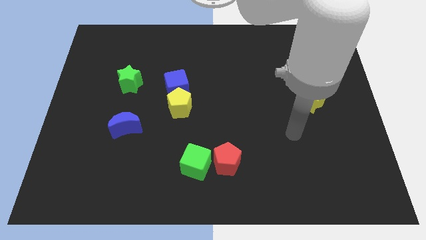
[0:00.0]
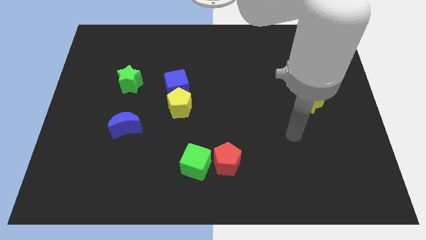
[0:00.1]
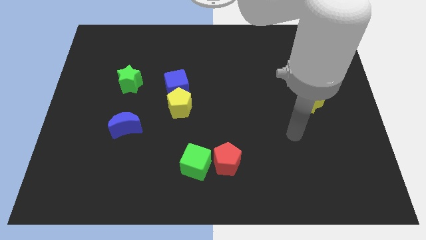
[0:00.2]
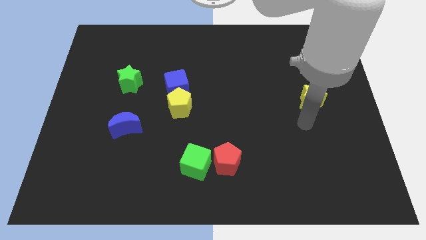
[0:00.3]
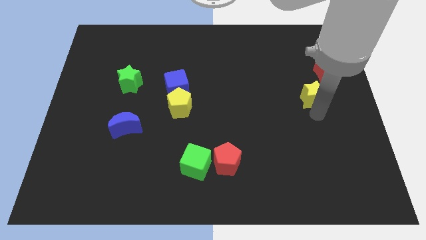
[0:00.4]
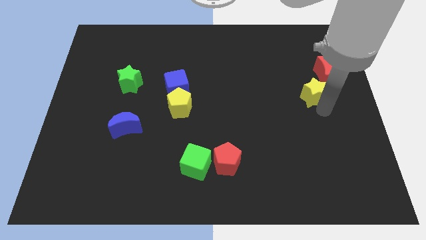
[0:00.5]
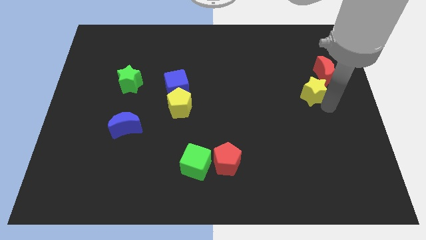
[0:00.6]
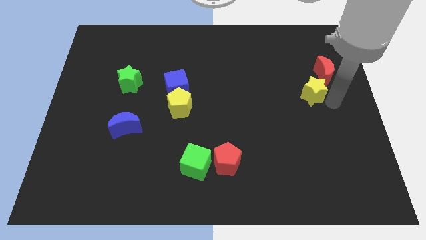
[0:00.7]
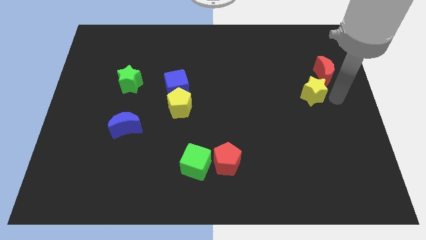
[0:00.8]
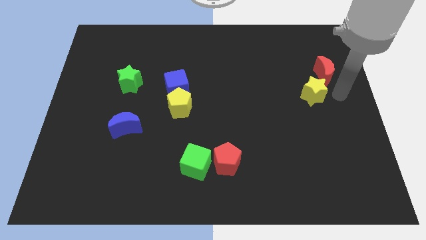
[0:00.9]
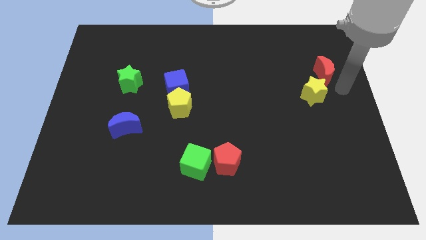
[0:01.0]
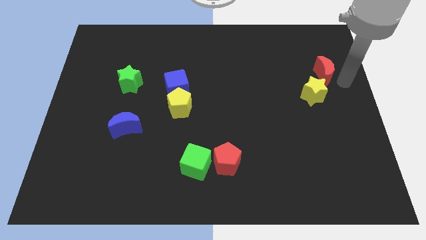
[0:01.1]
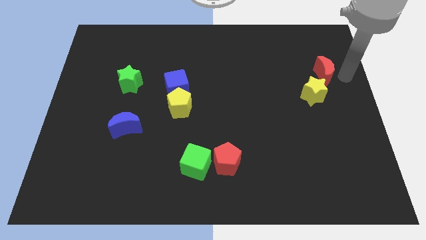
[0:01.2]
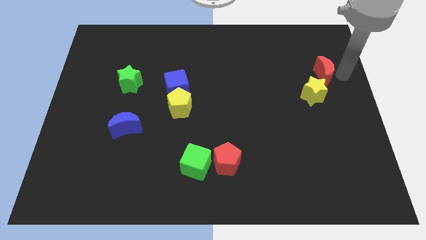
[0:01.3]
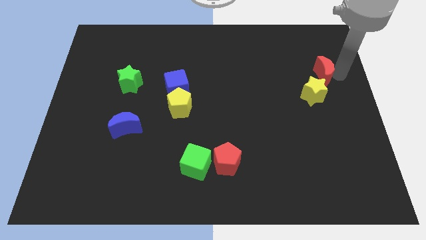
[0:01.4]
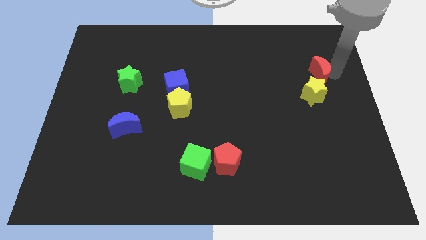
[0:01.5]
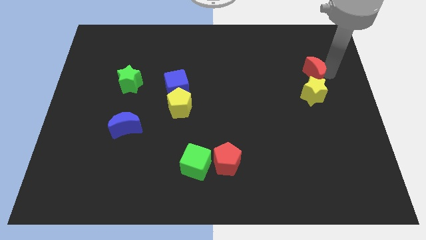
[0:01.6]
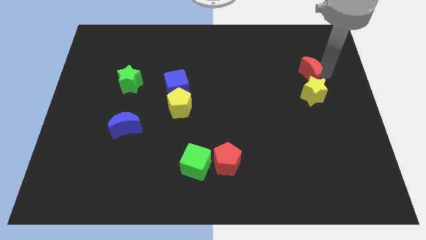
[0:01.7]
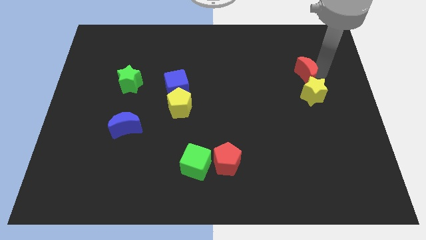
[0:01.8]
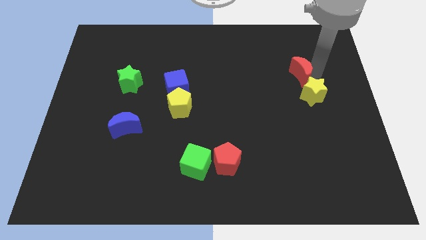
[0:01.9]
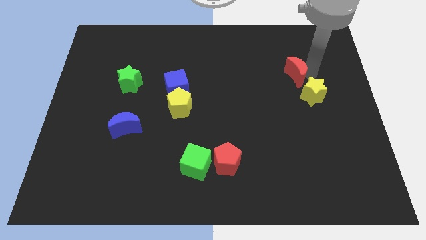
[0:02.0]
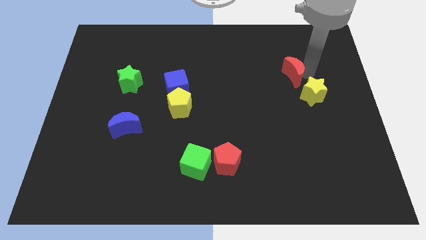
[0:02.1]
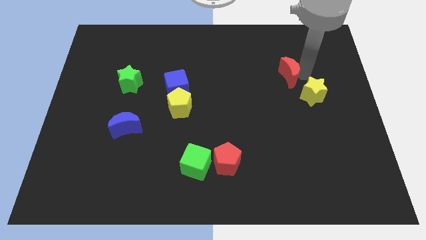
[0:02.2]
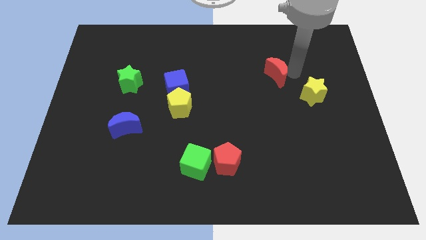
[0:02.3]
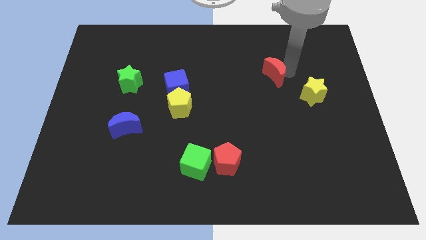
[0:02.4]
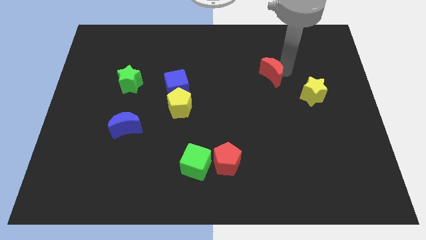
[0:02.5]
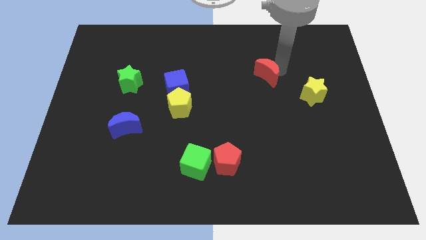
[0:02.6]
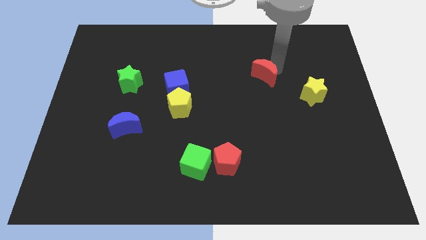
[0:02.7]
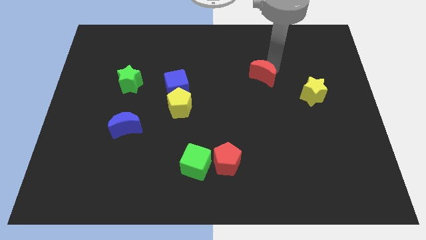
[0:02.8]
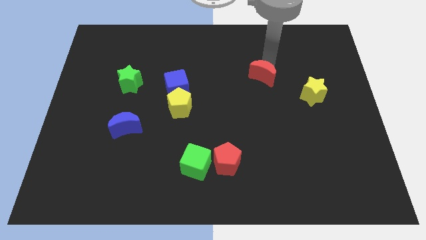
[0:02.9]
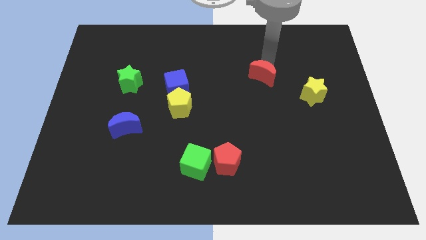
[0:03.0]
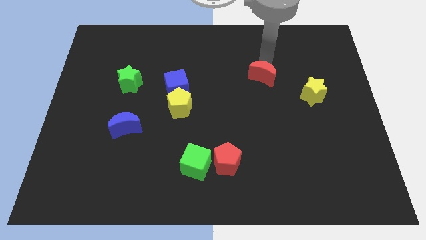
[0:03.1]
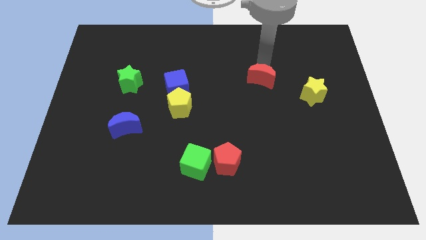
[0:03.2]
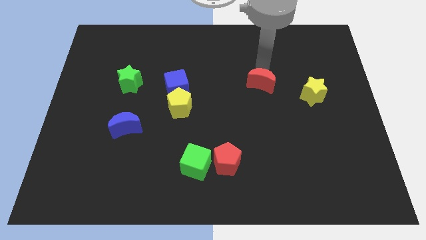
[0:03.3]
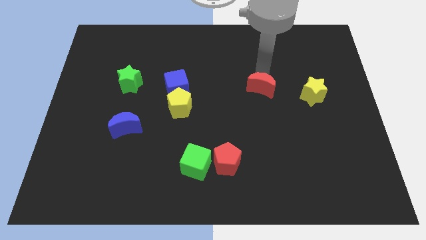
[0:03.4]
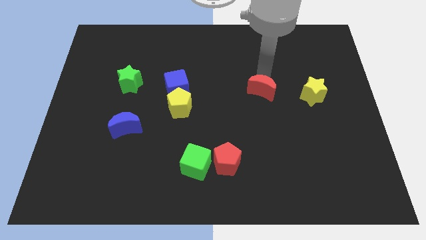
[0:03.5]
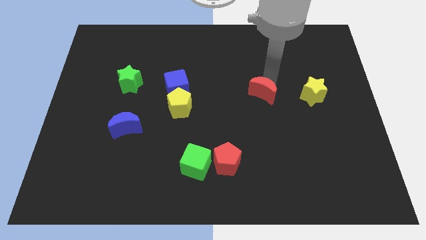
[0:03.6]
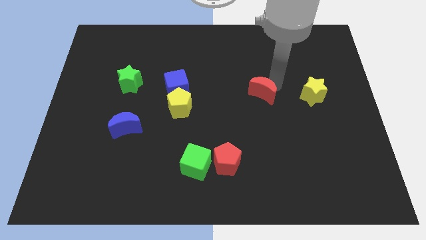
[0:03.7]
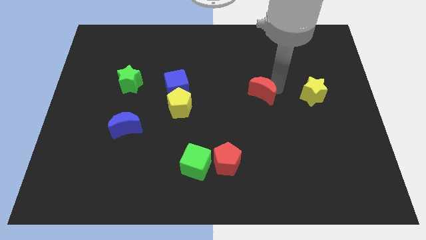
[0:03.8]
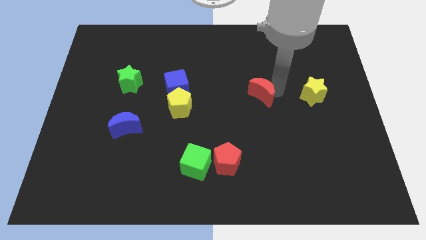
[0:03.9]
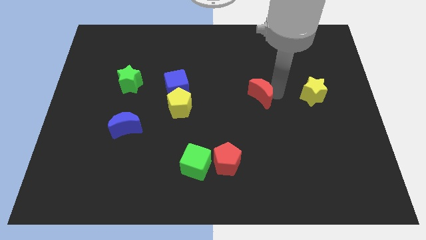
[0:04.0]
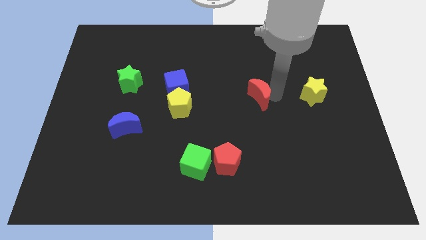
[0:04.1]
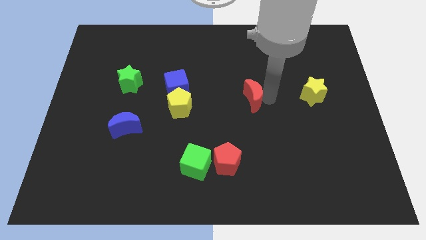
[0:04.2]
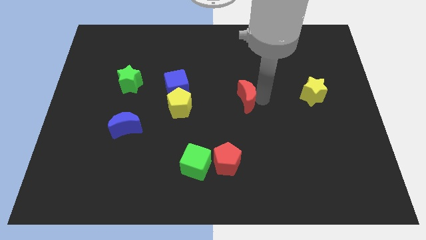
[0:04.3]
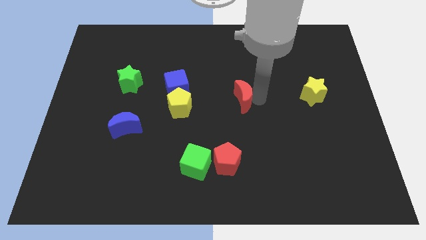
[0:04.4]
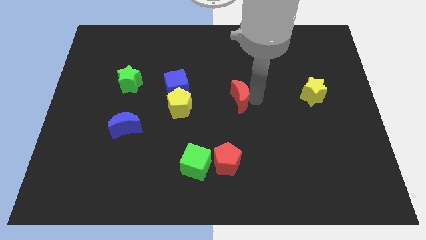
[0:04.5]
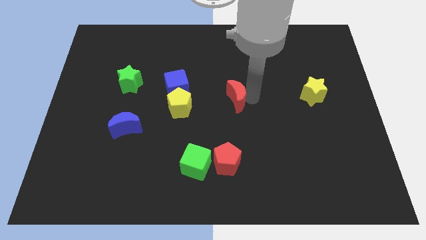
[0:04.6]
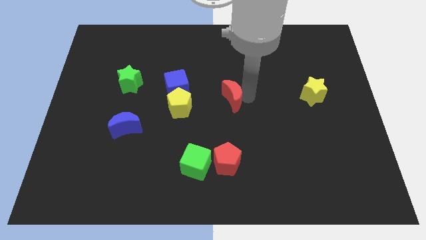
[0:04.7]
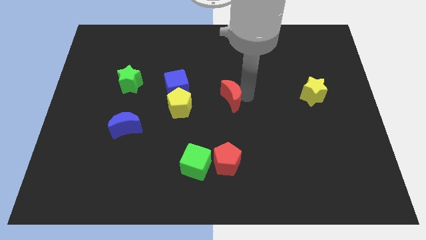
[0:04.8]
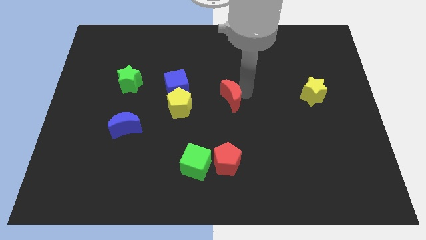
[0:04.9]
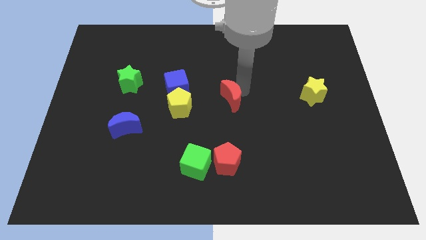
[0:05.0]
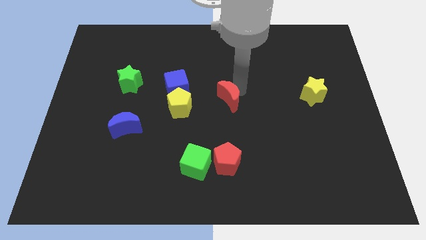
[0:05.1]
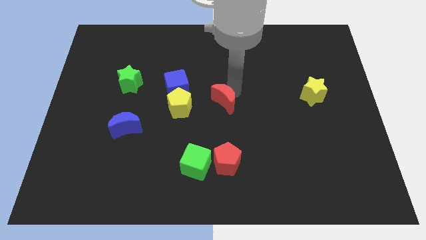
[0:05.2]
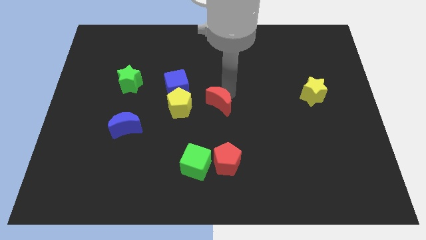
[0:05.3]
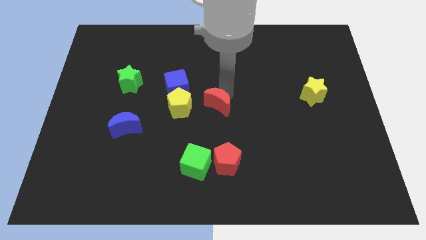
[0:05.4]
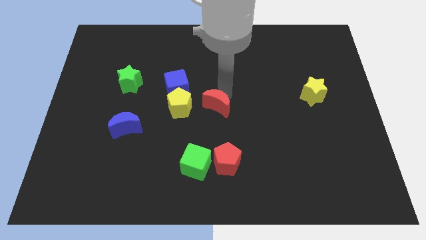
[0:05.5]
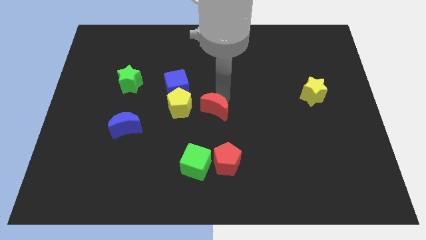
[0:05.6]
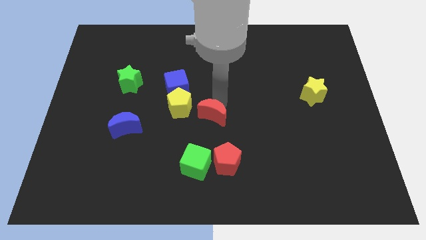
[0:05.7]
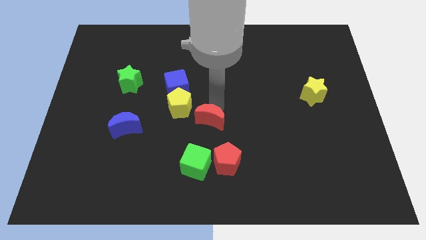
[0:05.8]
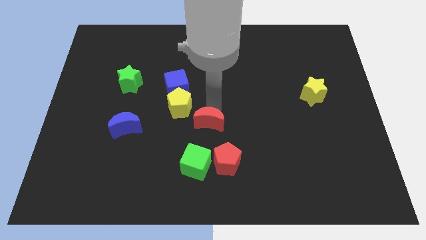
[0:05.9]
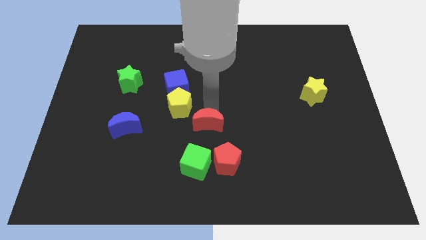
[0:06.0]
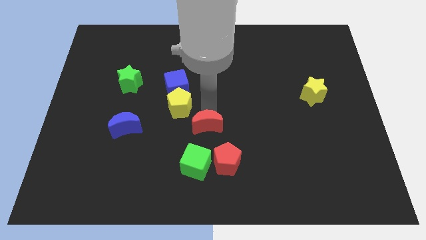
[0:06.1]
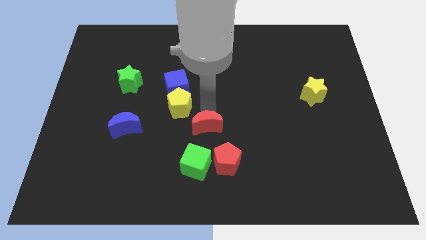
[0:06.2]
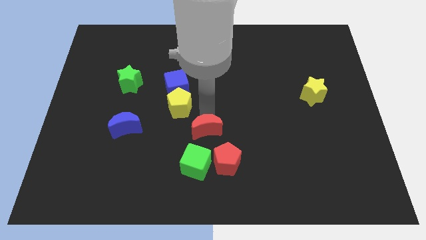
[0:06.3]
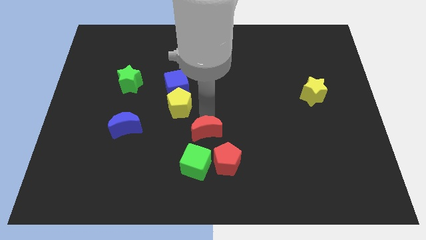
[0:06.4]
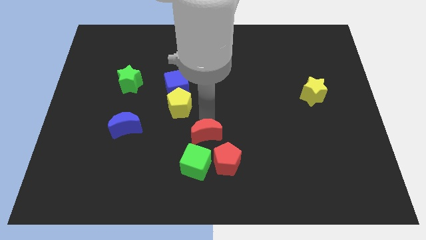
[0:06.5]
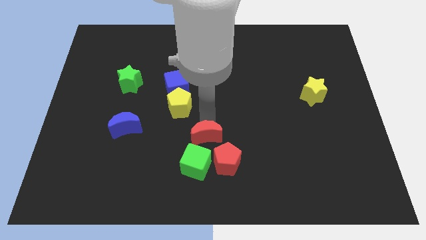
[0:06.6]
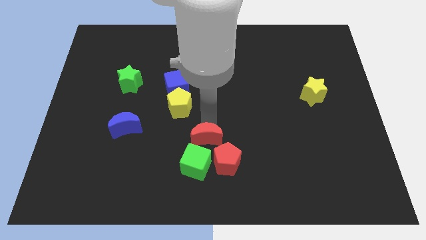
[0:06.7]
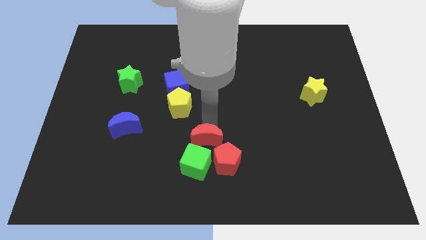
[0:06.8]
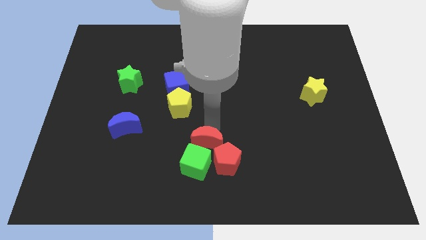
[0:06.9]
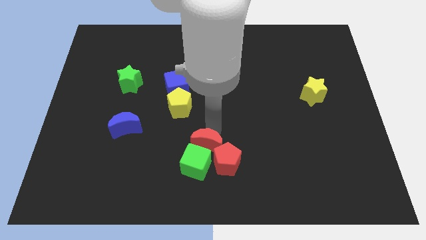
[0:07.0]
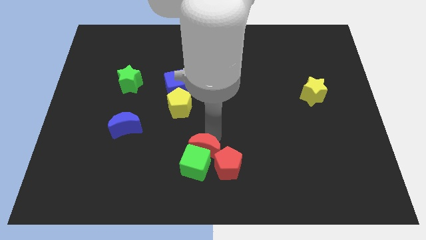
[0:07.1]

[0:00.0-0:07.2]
push the red moon to the green cube

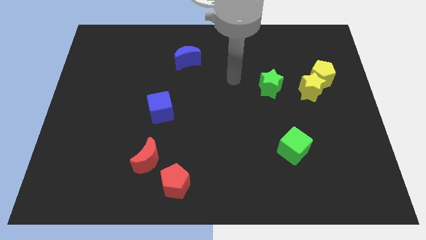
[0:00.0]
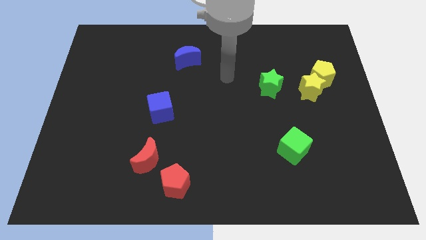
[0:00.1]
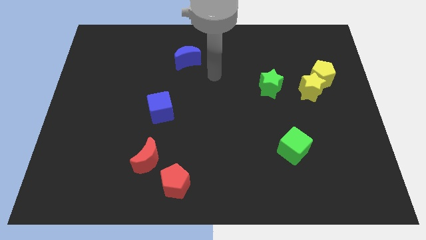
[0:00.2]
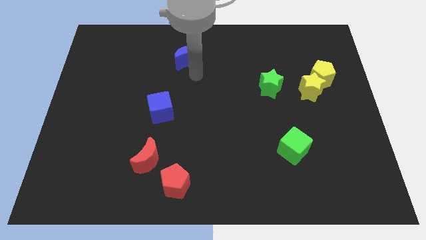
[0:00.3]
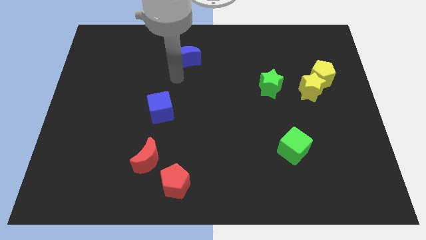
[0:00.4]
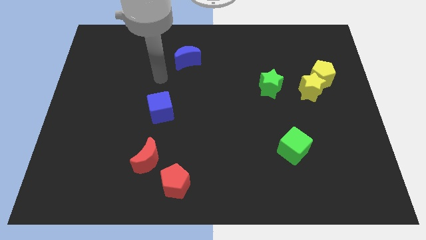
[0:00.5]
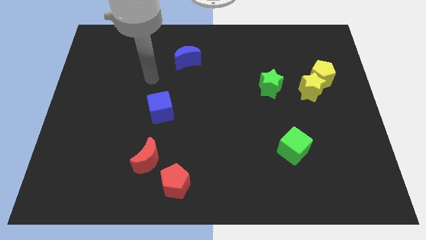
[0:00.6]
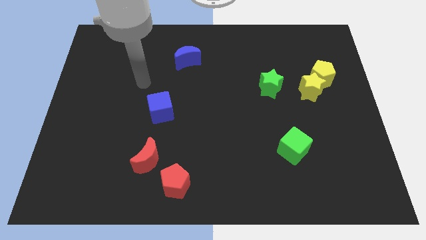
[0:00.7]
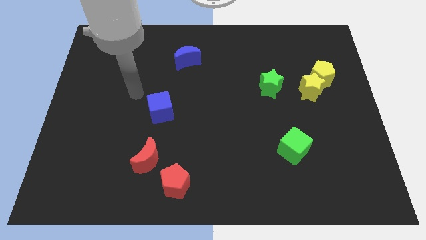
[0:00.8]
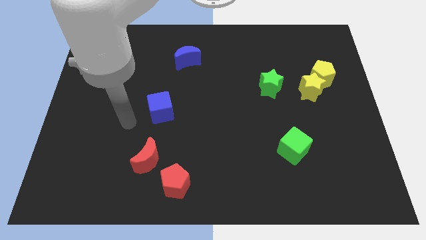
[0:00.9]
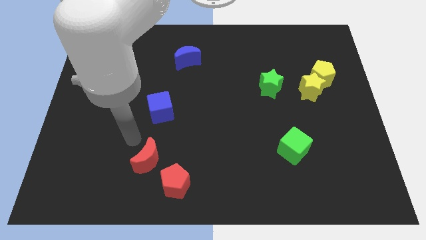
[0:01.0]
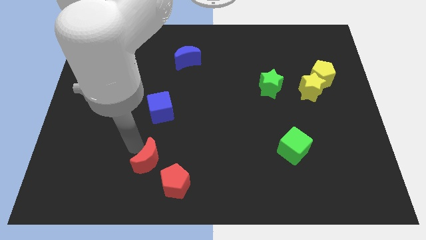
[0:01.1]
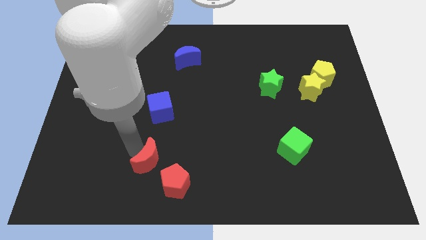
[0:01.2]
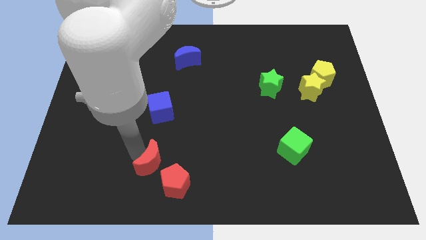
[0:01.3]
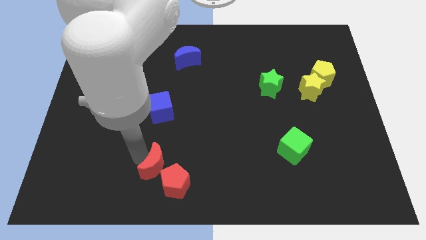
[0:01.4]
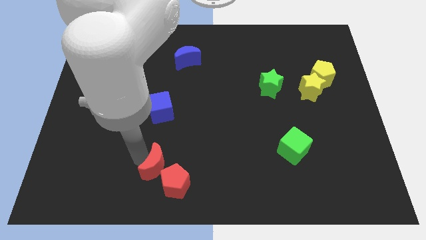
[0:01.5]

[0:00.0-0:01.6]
put the red moon close to the red pentagon
